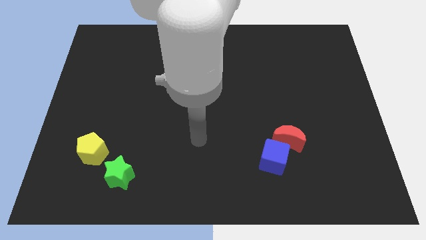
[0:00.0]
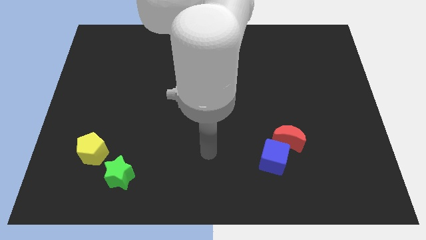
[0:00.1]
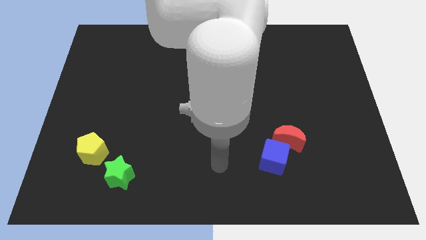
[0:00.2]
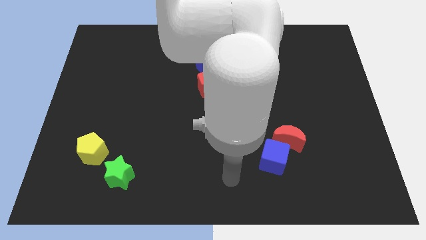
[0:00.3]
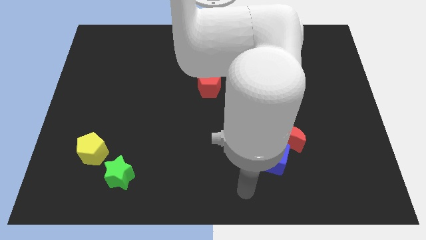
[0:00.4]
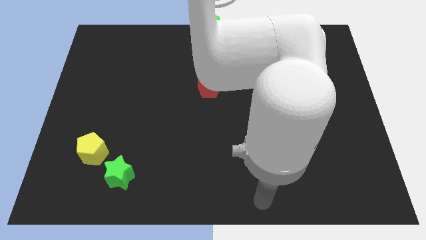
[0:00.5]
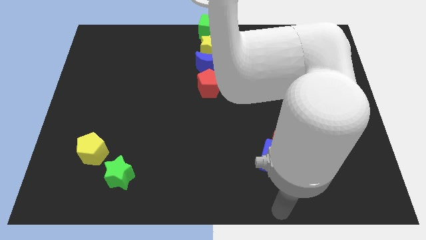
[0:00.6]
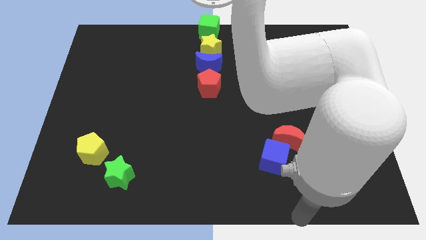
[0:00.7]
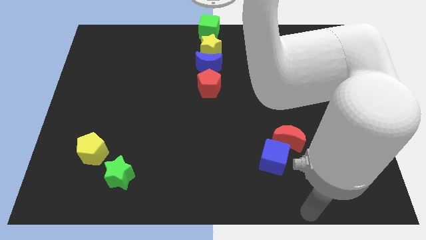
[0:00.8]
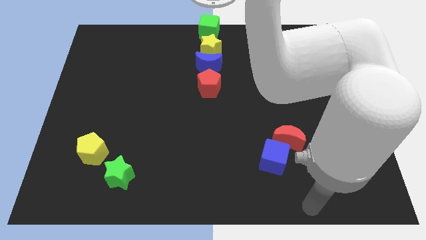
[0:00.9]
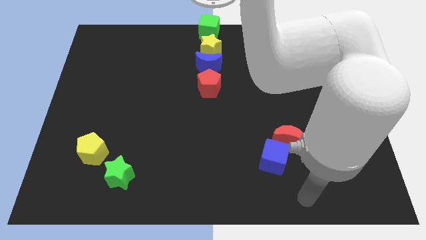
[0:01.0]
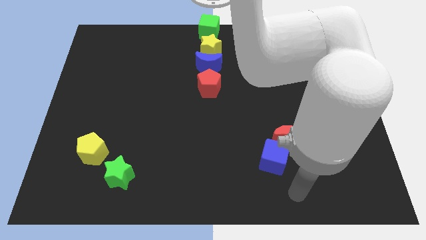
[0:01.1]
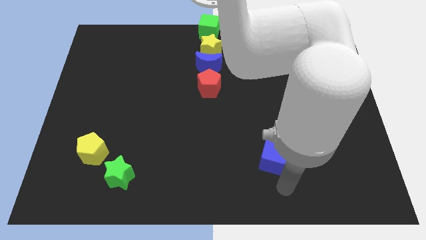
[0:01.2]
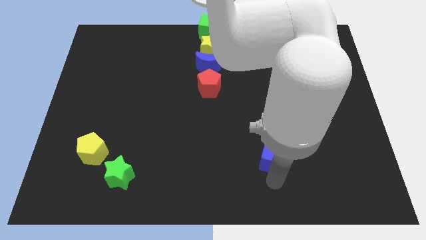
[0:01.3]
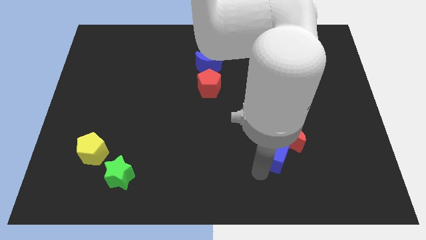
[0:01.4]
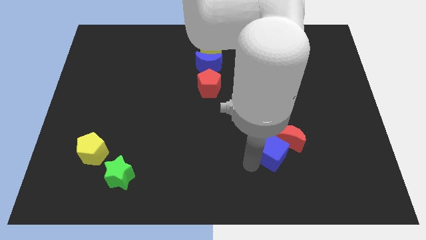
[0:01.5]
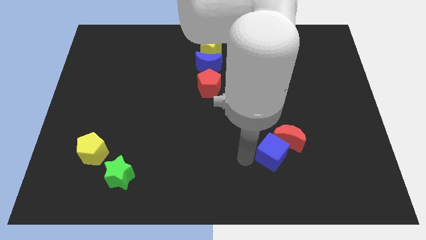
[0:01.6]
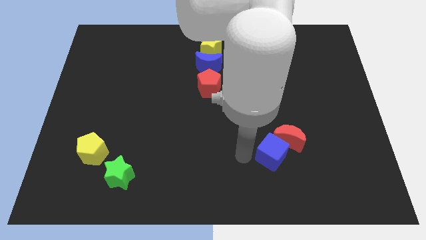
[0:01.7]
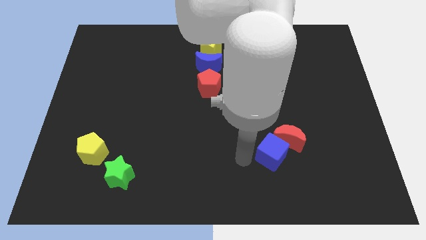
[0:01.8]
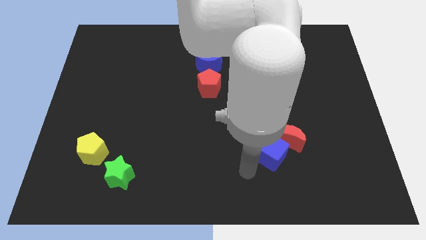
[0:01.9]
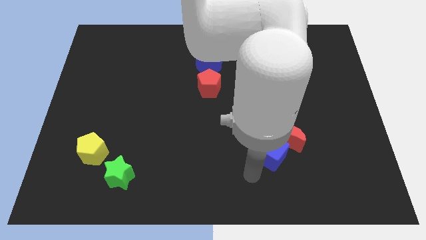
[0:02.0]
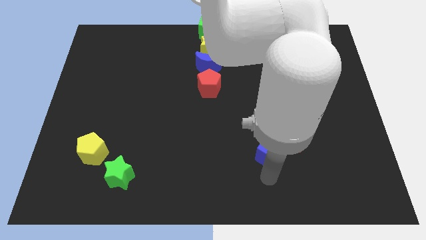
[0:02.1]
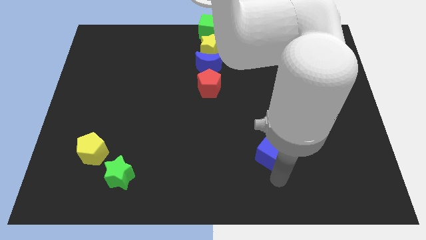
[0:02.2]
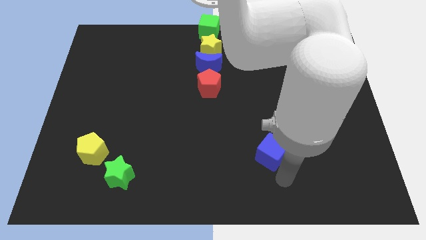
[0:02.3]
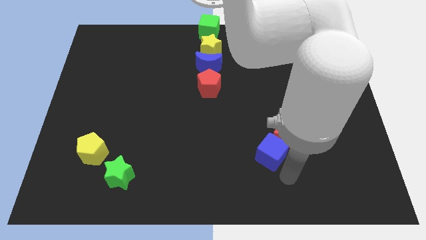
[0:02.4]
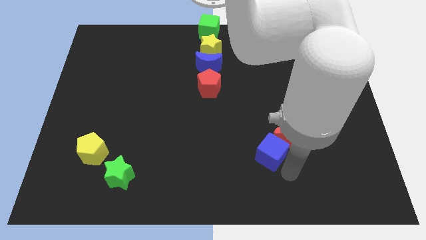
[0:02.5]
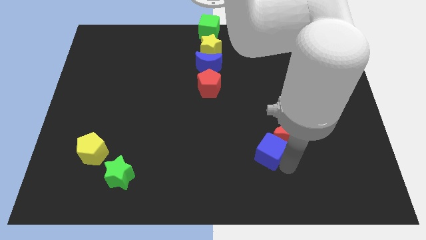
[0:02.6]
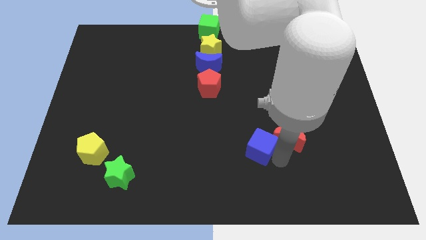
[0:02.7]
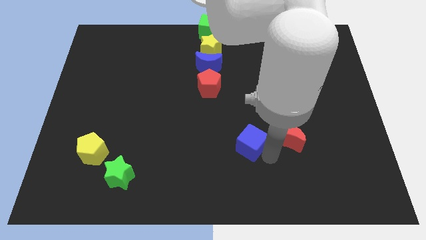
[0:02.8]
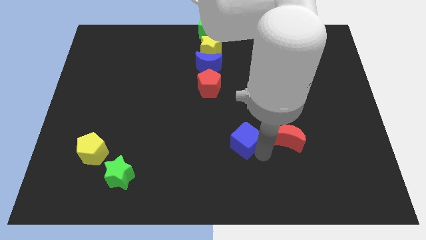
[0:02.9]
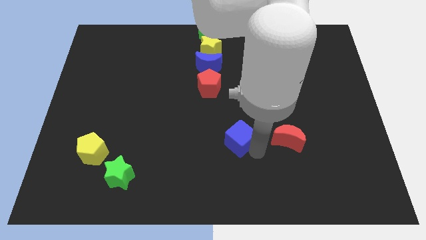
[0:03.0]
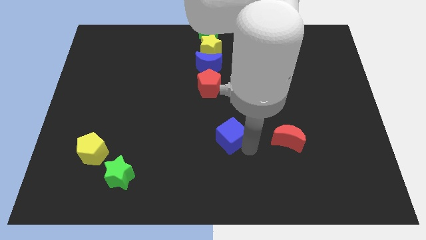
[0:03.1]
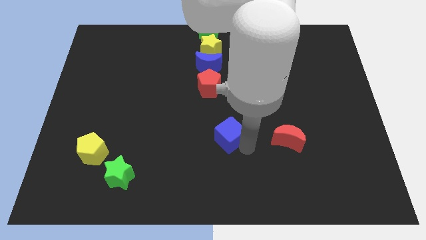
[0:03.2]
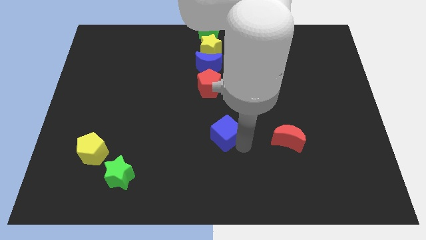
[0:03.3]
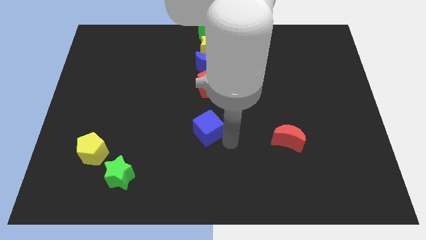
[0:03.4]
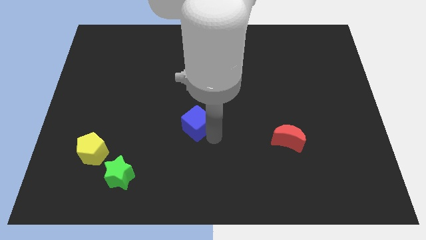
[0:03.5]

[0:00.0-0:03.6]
separate the blue cube from the red moon

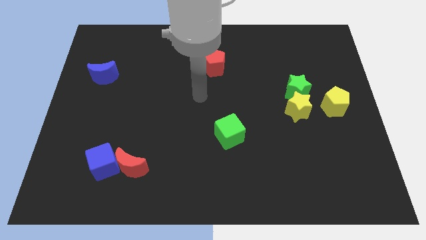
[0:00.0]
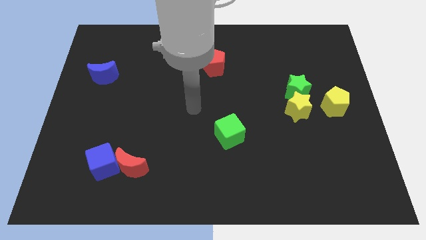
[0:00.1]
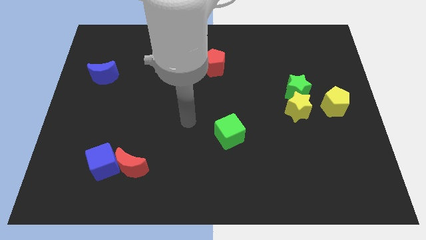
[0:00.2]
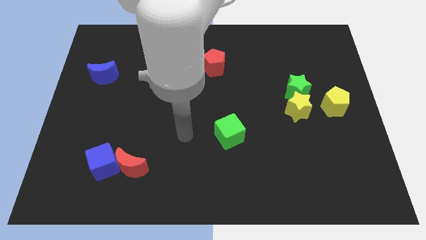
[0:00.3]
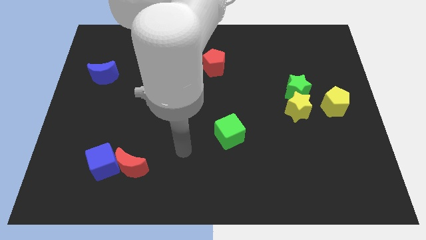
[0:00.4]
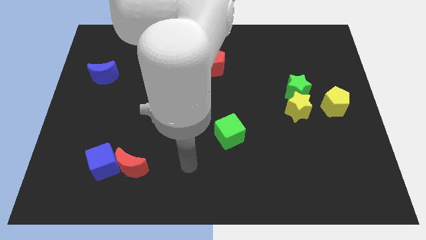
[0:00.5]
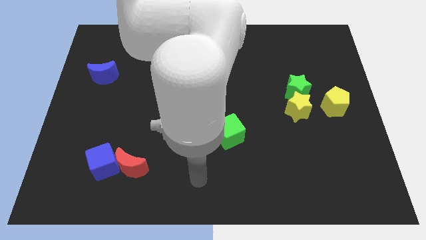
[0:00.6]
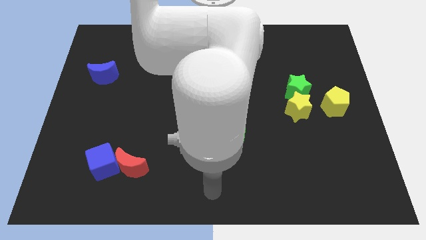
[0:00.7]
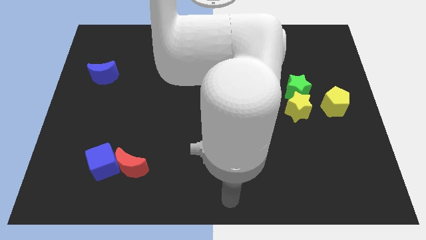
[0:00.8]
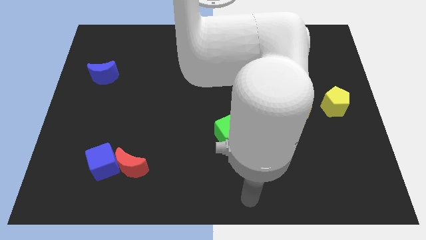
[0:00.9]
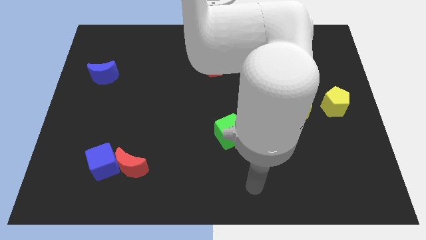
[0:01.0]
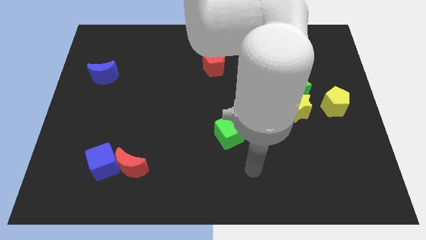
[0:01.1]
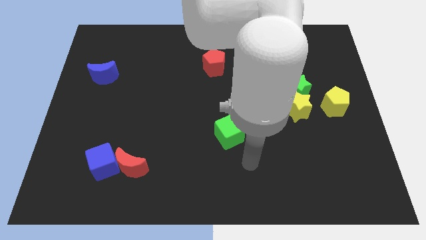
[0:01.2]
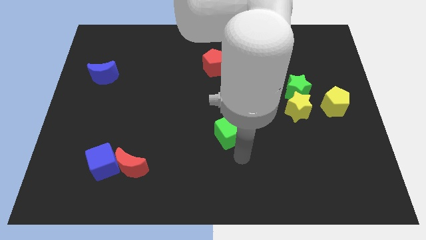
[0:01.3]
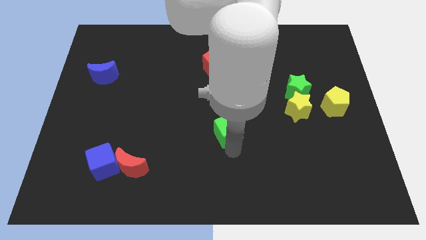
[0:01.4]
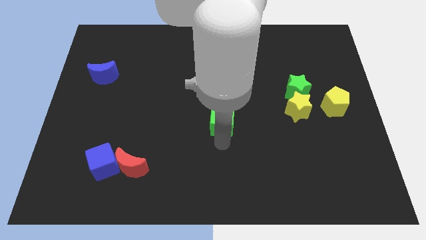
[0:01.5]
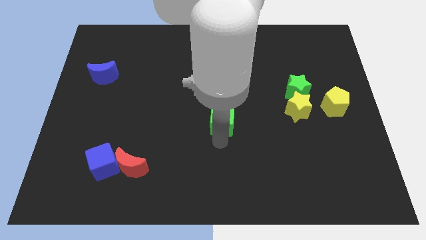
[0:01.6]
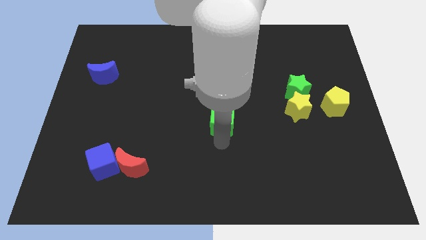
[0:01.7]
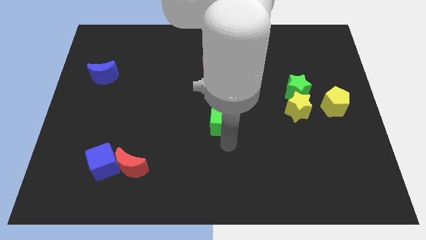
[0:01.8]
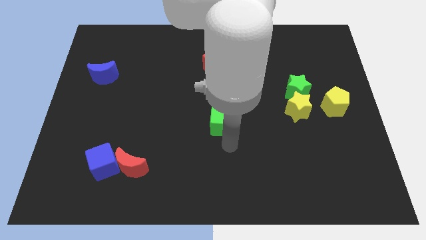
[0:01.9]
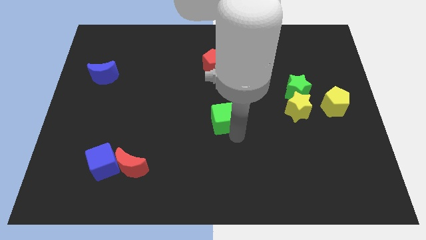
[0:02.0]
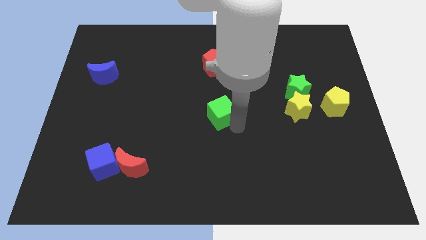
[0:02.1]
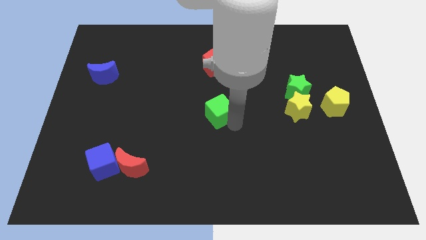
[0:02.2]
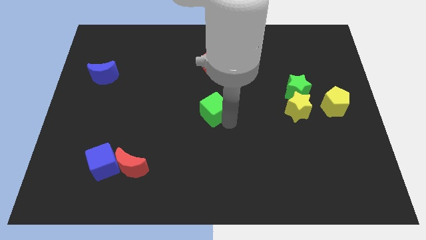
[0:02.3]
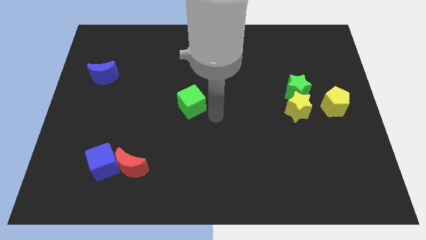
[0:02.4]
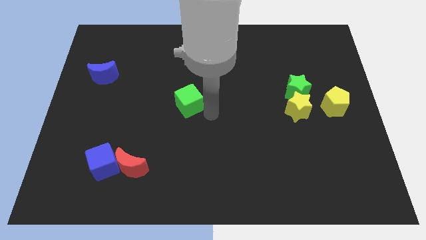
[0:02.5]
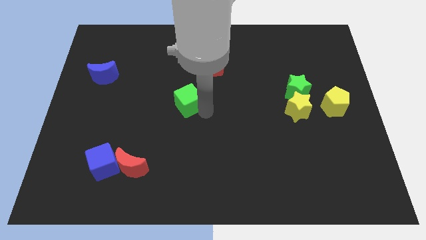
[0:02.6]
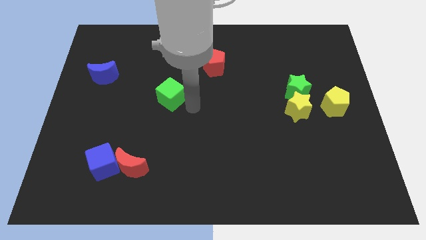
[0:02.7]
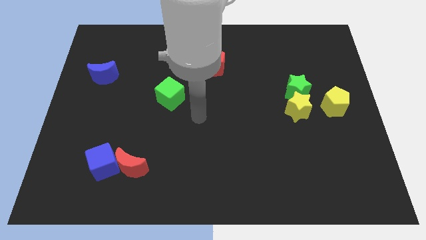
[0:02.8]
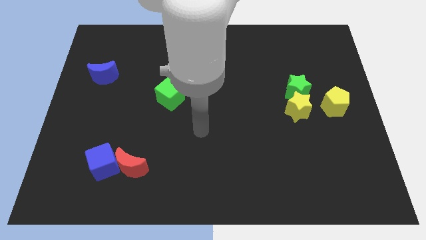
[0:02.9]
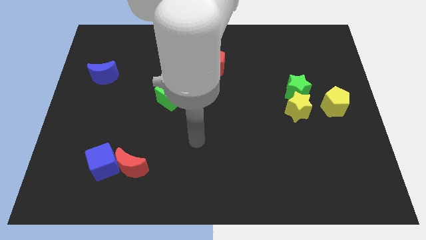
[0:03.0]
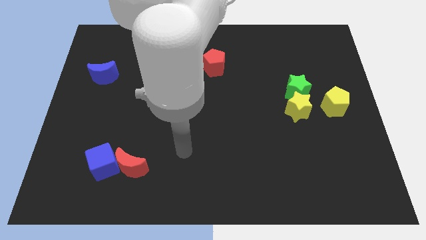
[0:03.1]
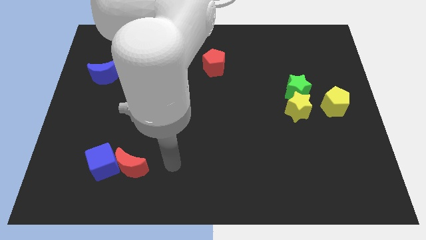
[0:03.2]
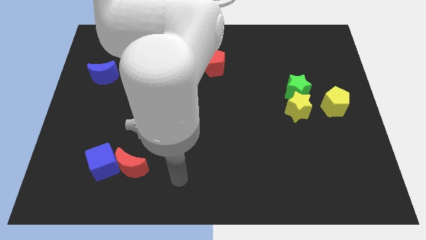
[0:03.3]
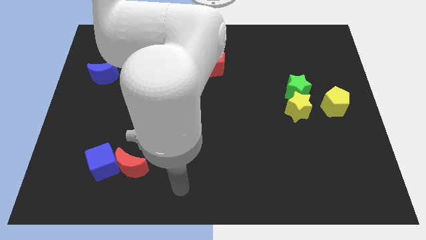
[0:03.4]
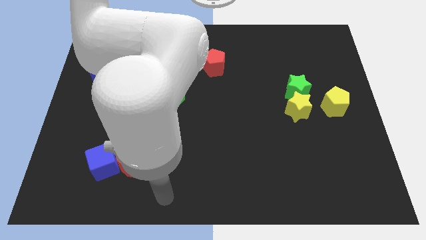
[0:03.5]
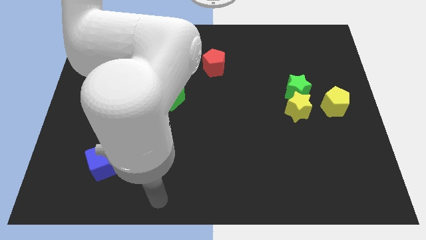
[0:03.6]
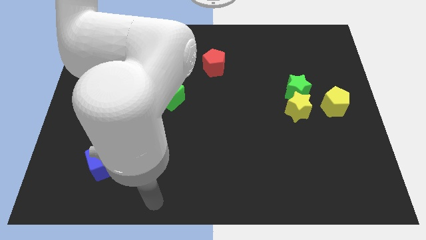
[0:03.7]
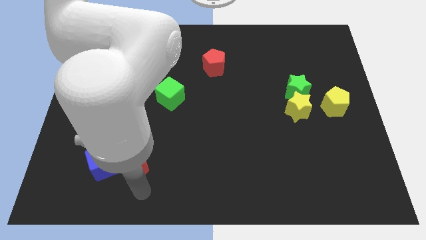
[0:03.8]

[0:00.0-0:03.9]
move the green cube to the left side of the board

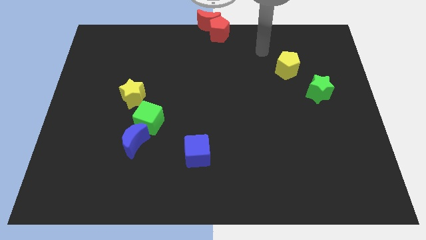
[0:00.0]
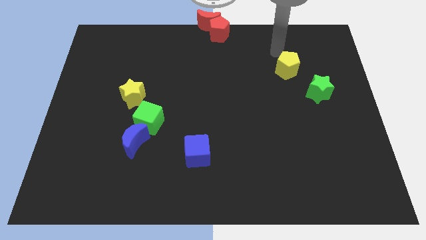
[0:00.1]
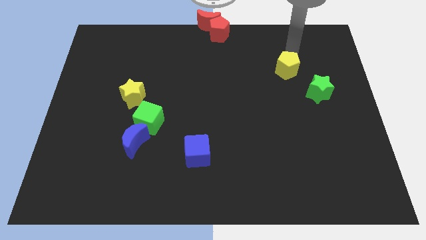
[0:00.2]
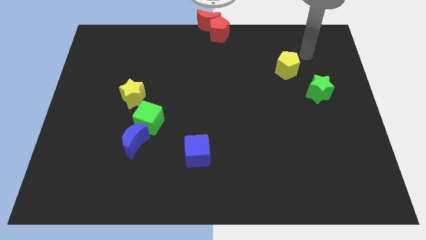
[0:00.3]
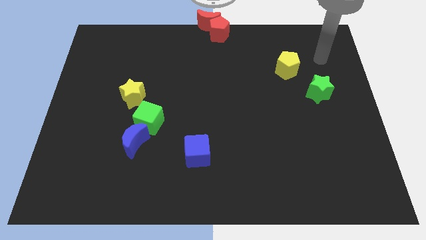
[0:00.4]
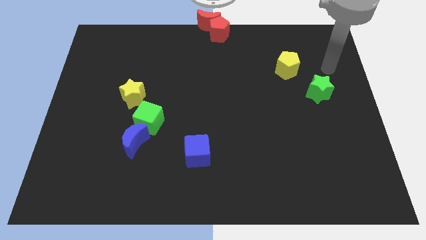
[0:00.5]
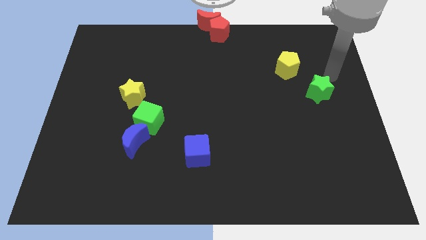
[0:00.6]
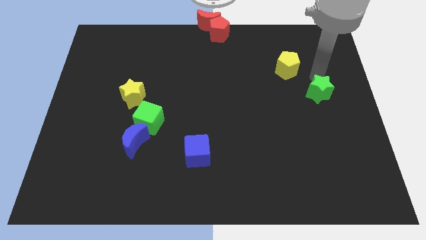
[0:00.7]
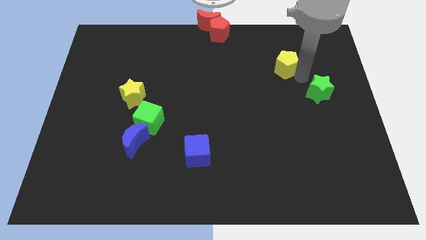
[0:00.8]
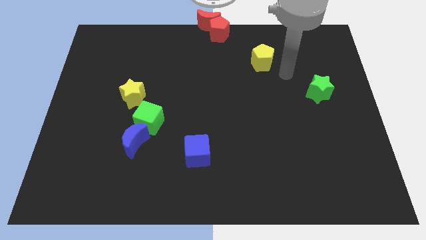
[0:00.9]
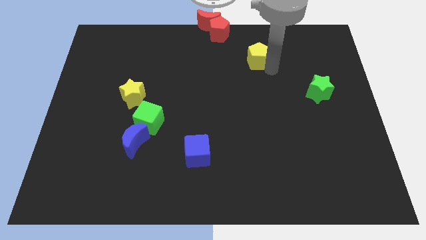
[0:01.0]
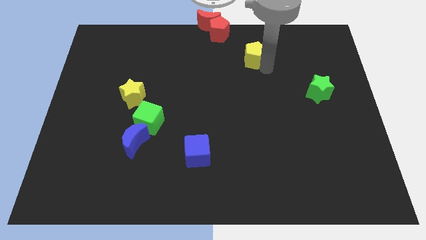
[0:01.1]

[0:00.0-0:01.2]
move yellow pentagon diagonally below the red blocks

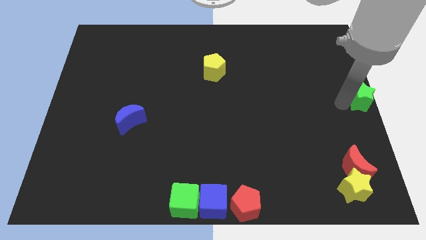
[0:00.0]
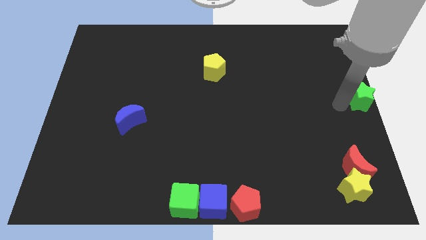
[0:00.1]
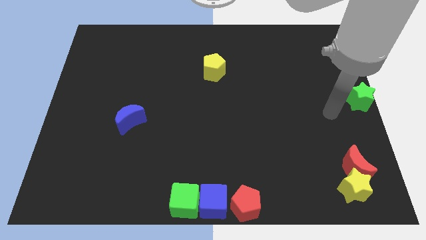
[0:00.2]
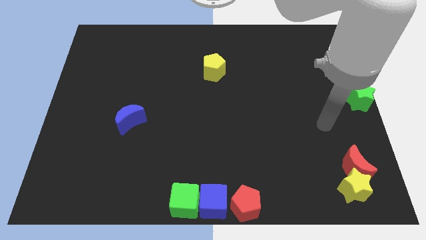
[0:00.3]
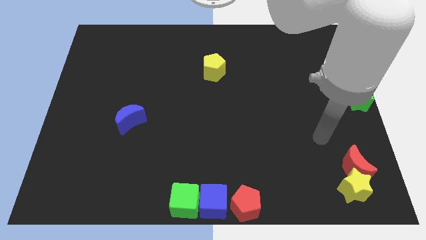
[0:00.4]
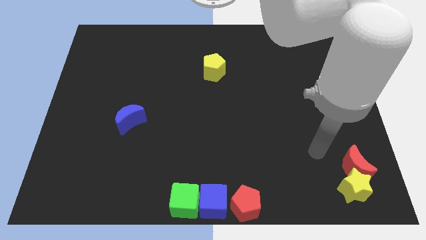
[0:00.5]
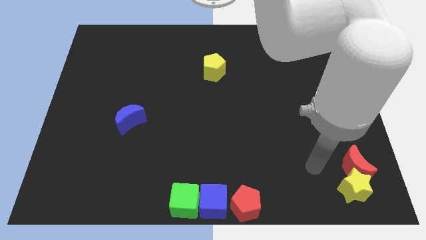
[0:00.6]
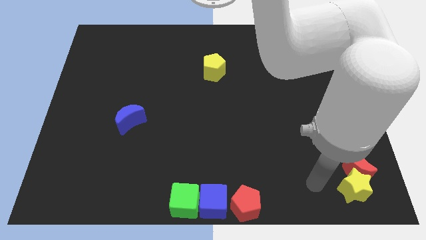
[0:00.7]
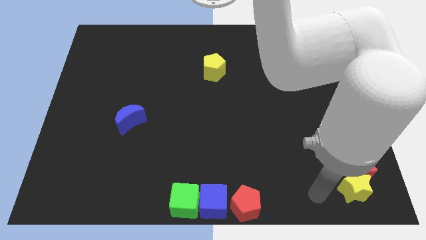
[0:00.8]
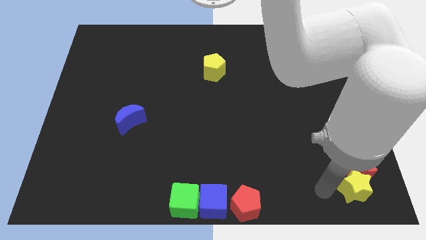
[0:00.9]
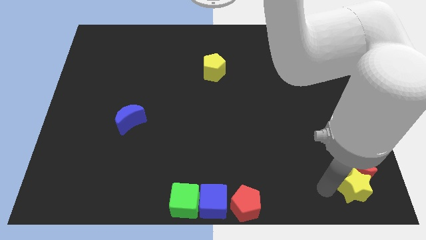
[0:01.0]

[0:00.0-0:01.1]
move your arm away from the green star
